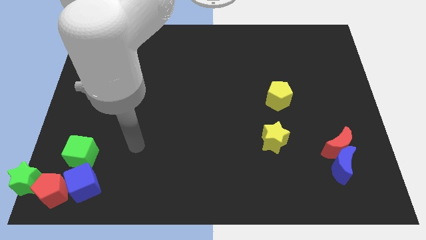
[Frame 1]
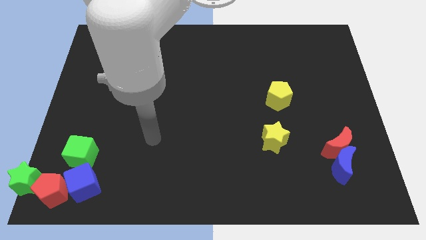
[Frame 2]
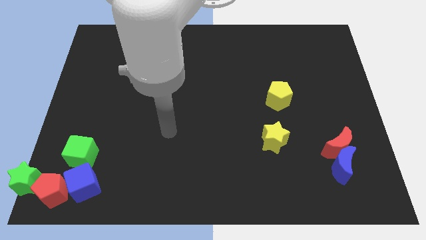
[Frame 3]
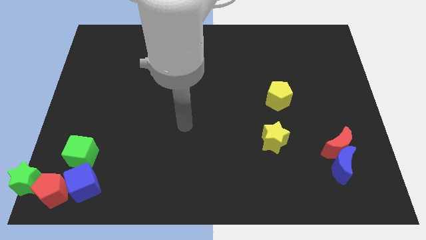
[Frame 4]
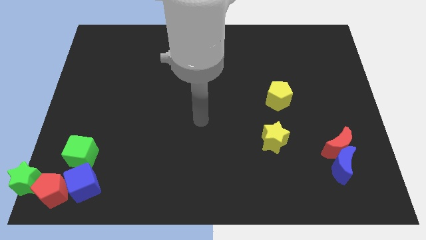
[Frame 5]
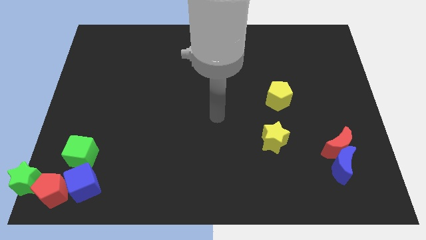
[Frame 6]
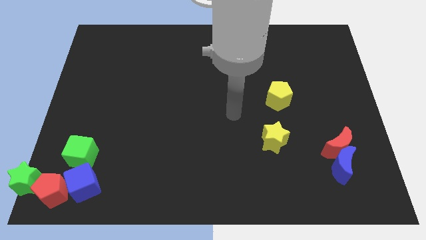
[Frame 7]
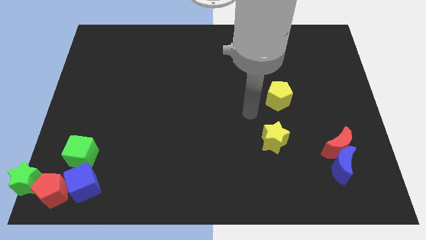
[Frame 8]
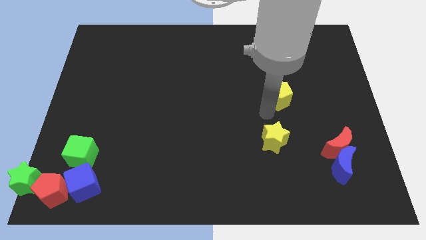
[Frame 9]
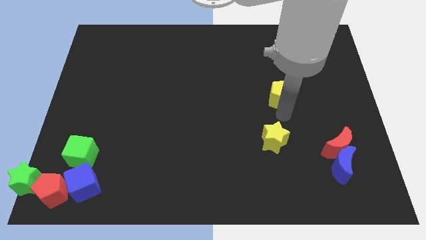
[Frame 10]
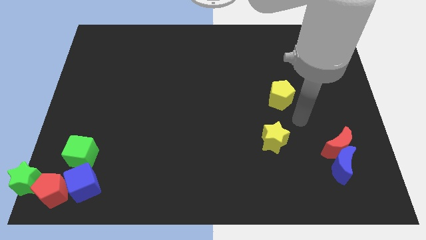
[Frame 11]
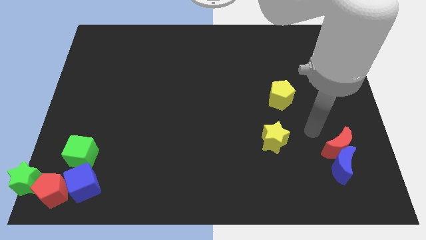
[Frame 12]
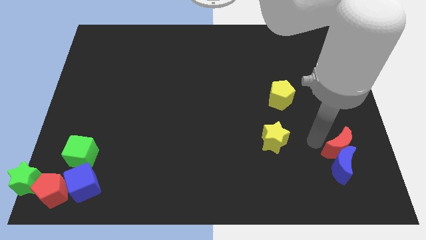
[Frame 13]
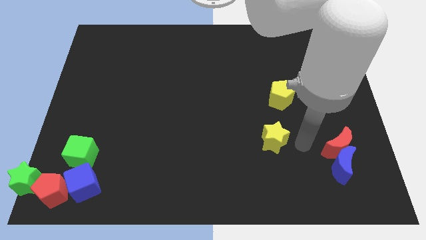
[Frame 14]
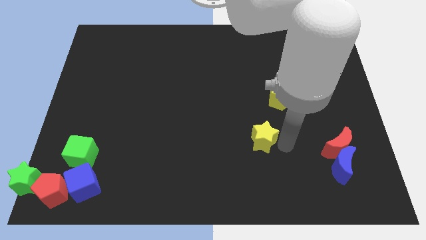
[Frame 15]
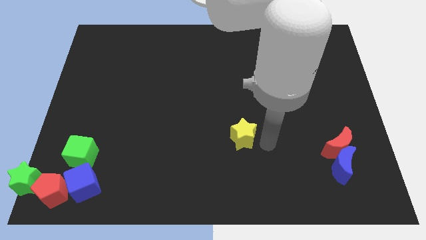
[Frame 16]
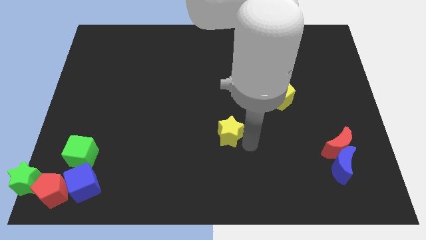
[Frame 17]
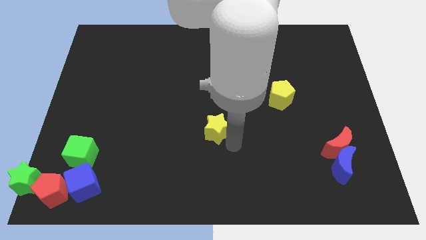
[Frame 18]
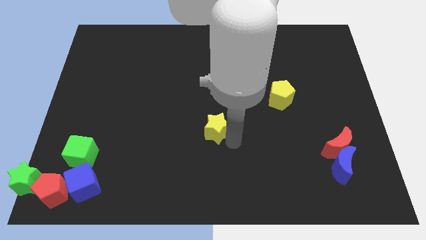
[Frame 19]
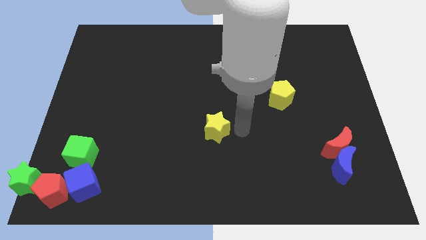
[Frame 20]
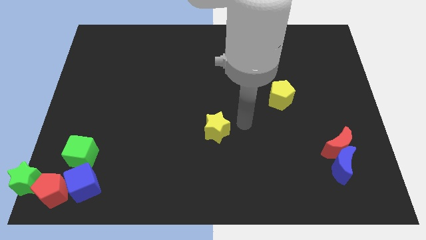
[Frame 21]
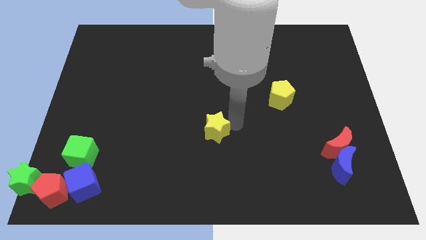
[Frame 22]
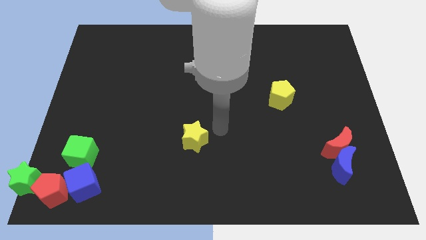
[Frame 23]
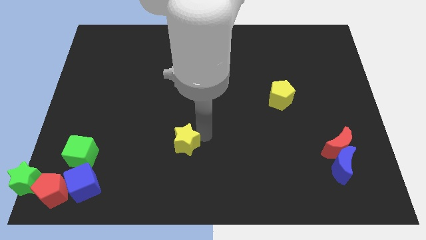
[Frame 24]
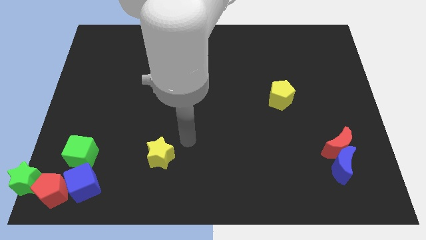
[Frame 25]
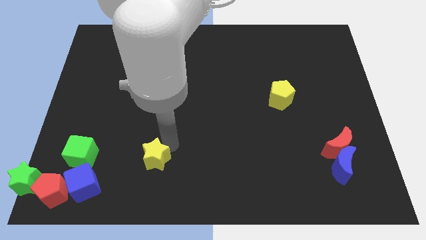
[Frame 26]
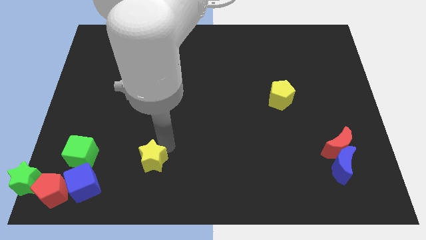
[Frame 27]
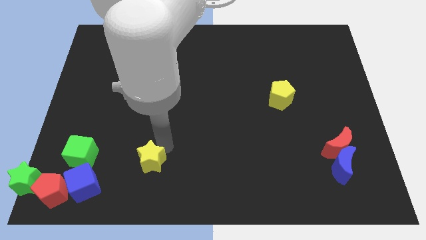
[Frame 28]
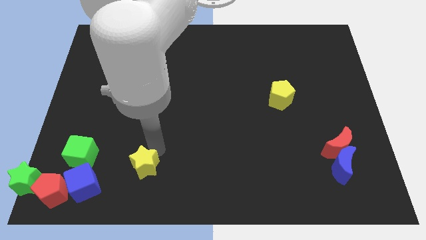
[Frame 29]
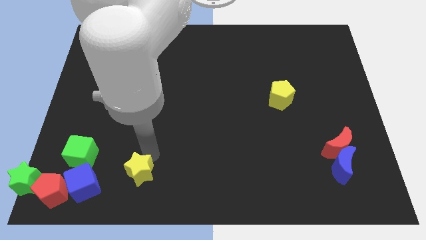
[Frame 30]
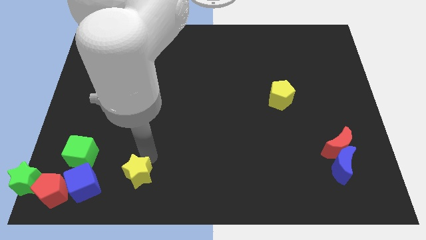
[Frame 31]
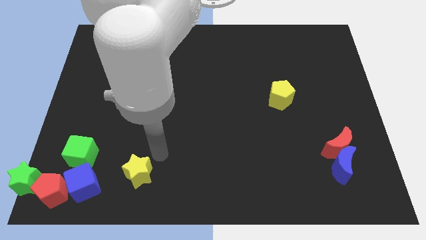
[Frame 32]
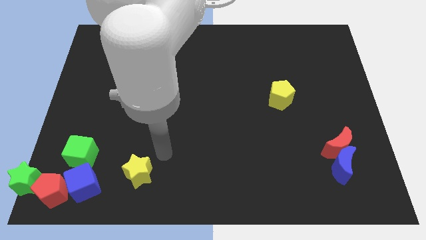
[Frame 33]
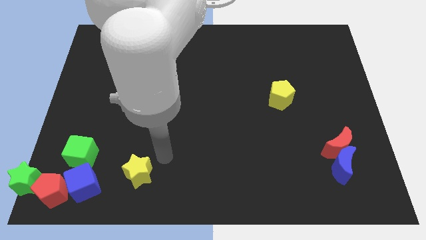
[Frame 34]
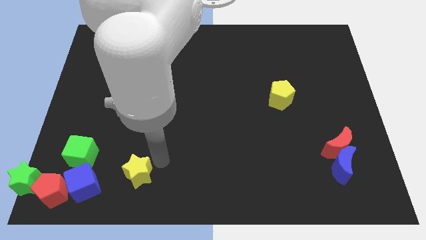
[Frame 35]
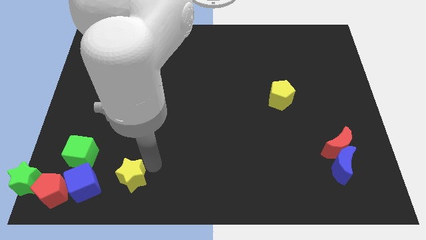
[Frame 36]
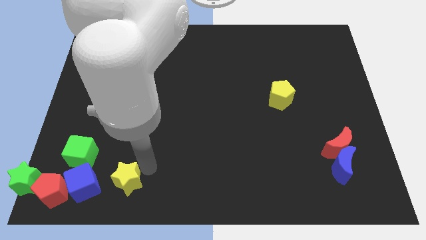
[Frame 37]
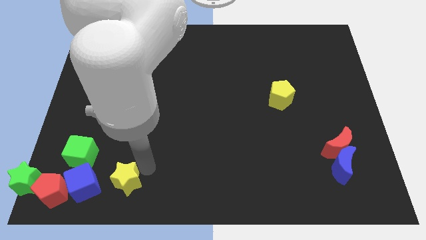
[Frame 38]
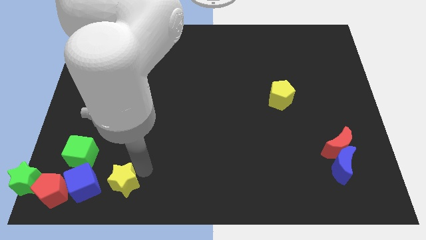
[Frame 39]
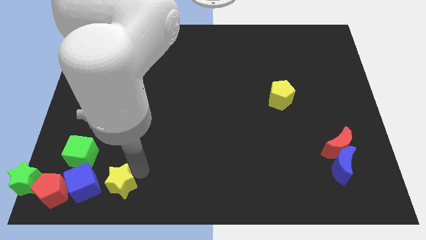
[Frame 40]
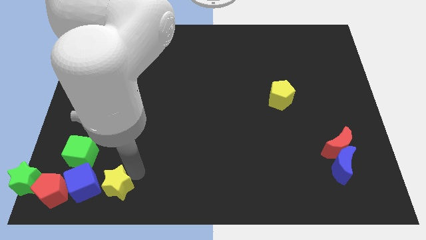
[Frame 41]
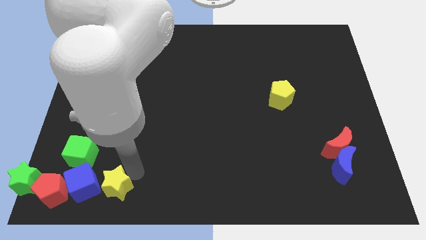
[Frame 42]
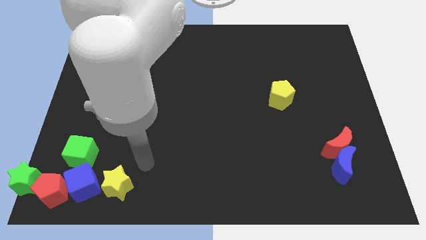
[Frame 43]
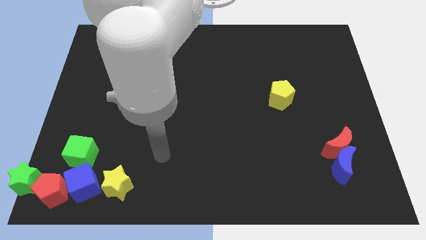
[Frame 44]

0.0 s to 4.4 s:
put the yellow star close to the group of blocks

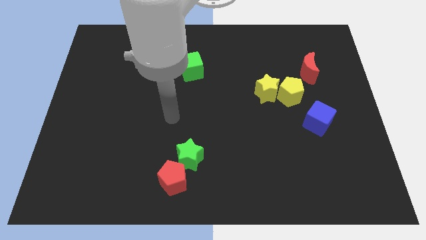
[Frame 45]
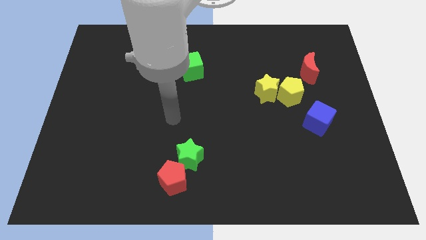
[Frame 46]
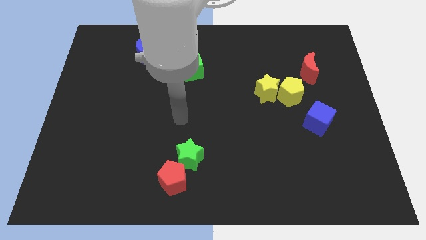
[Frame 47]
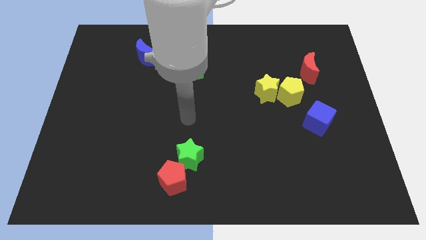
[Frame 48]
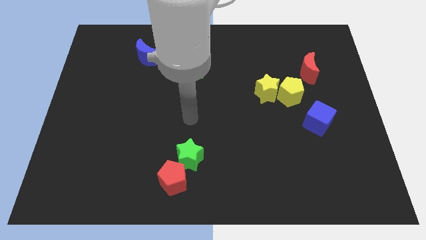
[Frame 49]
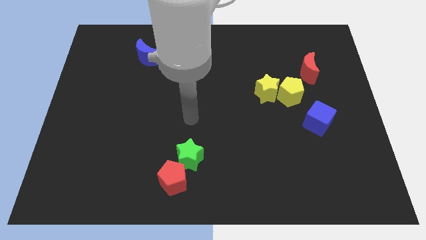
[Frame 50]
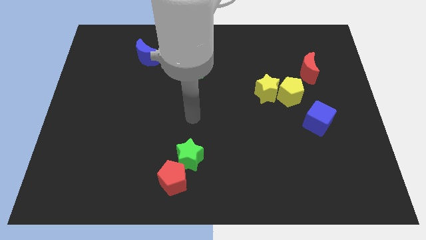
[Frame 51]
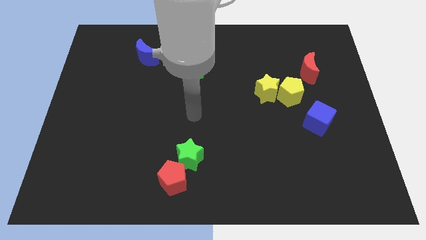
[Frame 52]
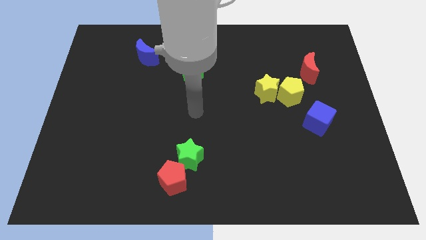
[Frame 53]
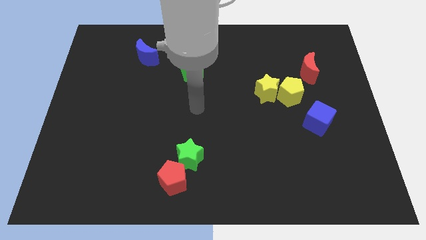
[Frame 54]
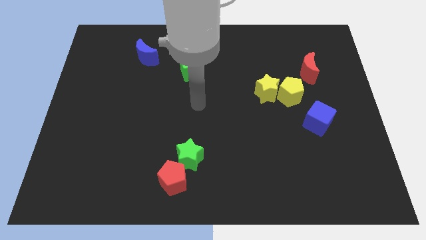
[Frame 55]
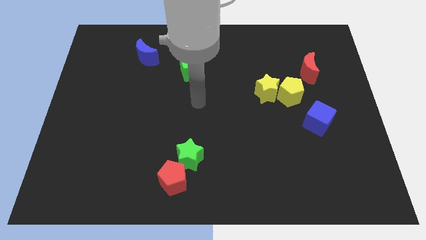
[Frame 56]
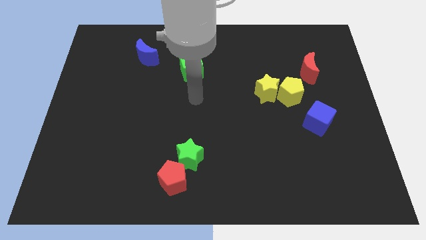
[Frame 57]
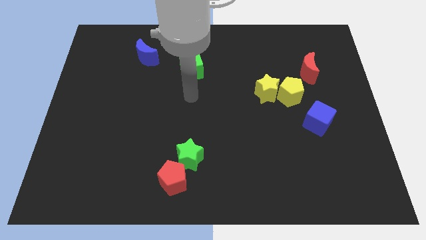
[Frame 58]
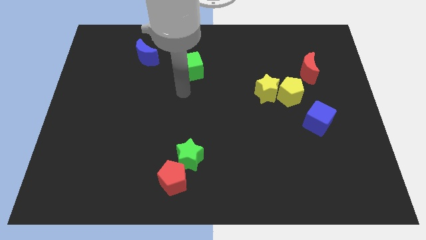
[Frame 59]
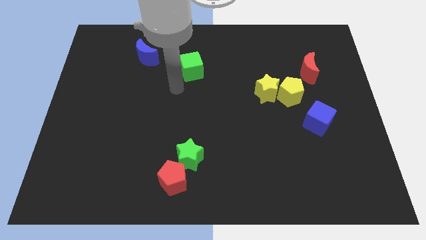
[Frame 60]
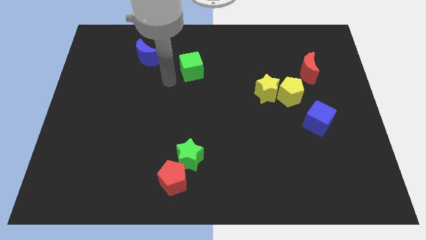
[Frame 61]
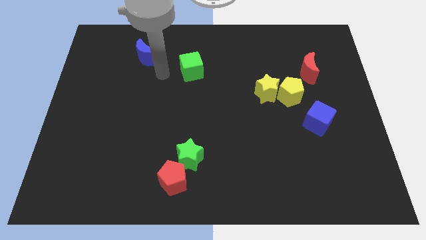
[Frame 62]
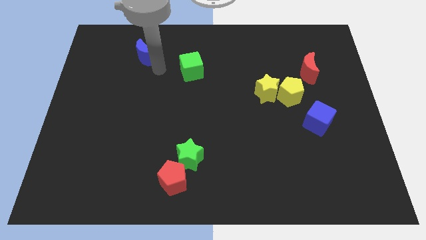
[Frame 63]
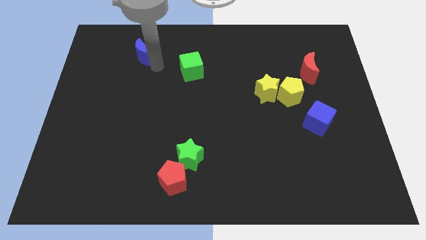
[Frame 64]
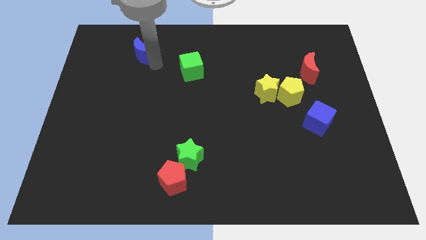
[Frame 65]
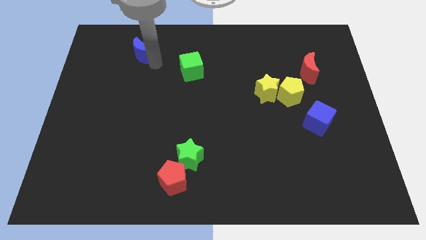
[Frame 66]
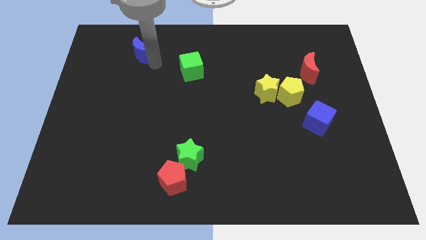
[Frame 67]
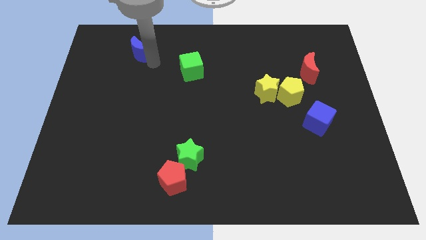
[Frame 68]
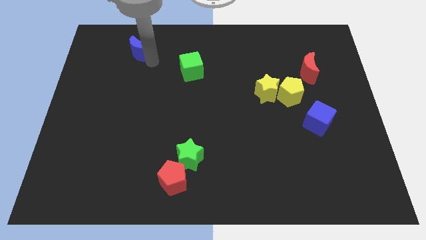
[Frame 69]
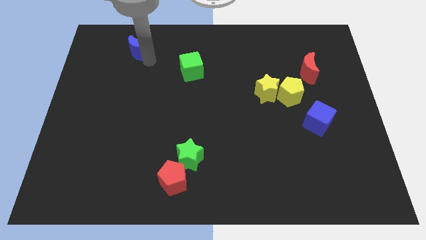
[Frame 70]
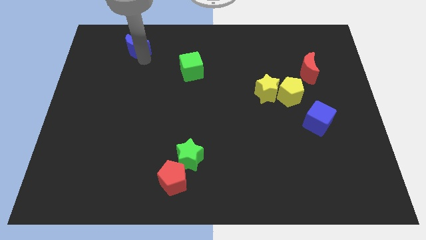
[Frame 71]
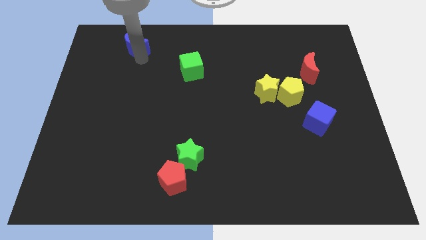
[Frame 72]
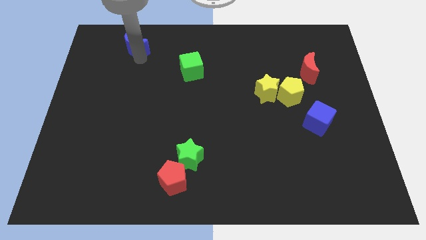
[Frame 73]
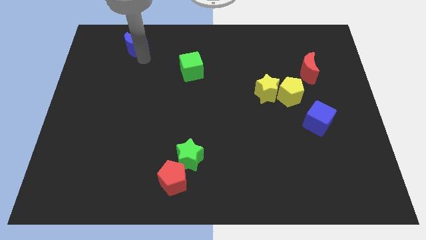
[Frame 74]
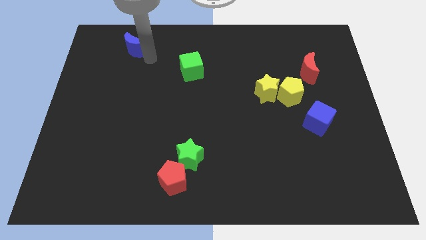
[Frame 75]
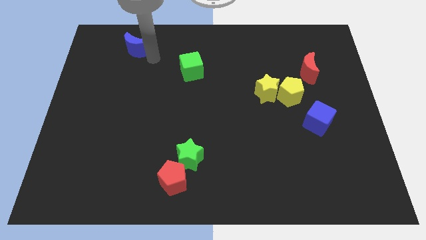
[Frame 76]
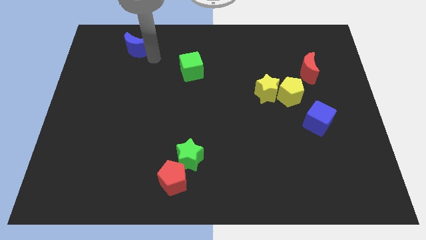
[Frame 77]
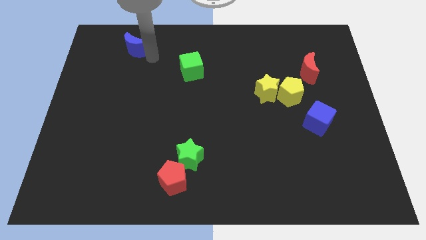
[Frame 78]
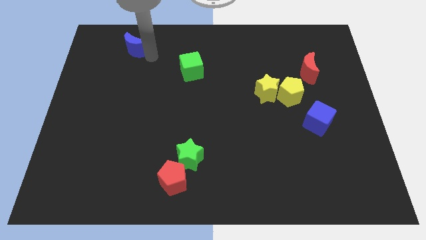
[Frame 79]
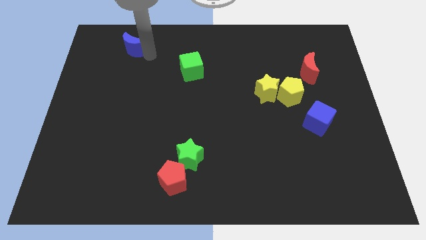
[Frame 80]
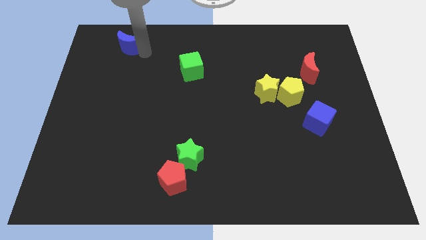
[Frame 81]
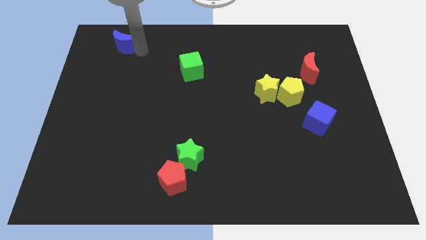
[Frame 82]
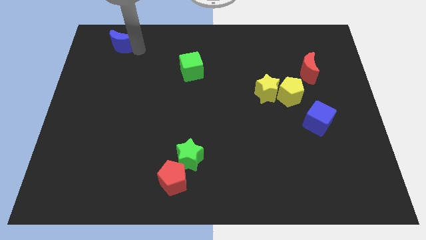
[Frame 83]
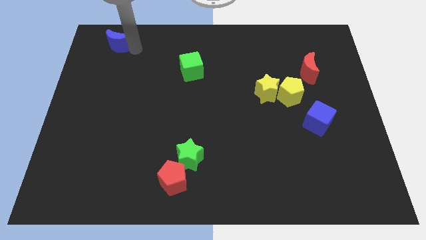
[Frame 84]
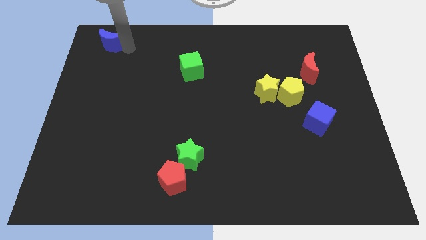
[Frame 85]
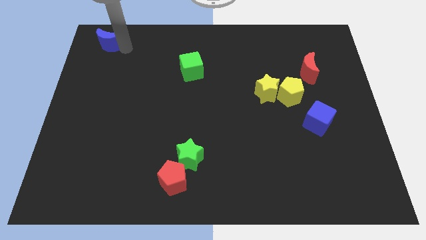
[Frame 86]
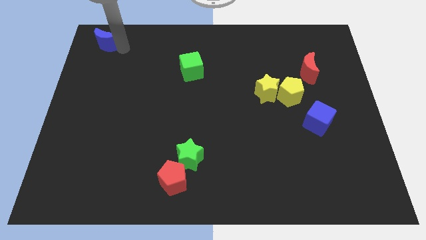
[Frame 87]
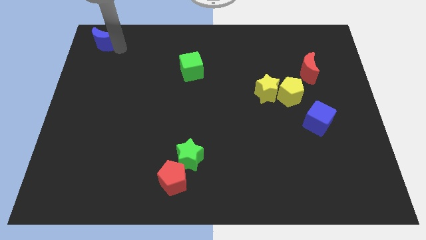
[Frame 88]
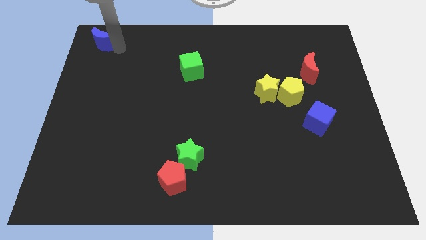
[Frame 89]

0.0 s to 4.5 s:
place blue moon to the top left corner of the board

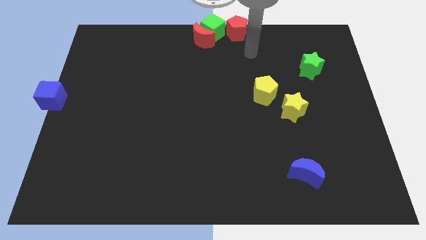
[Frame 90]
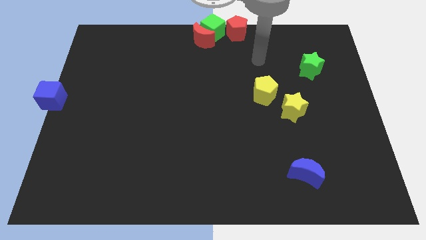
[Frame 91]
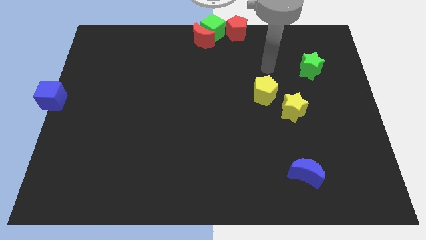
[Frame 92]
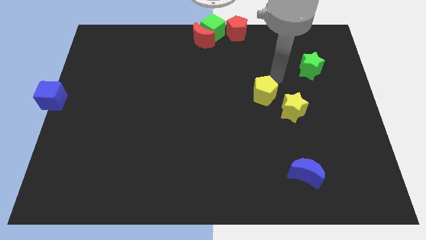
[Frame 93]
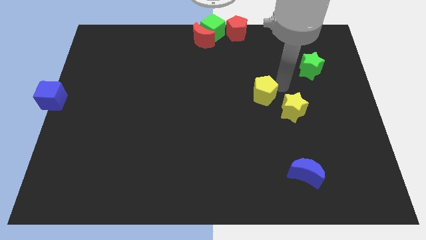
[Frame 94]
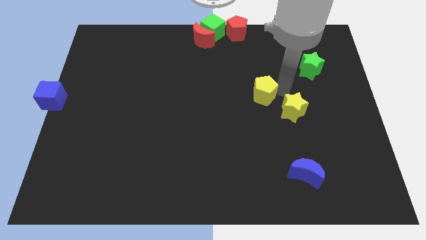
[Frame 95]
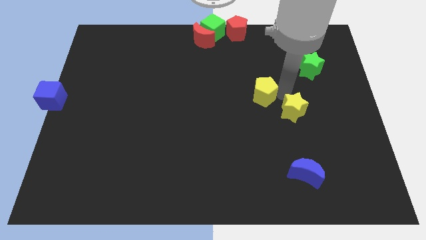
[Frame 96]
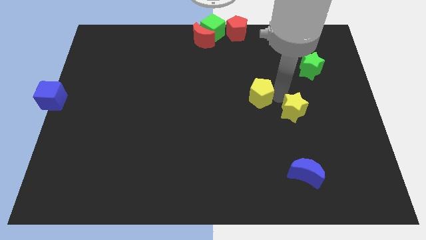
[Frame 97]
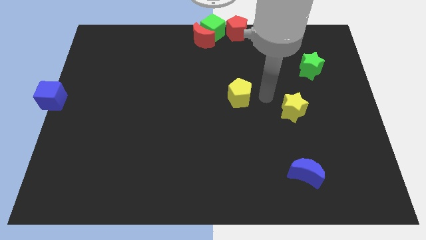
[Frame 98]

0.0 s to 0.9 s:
slightly move the yellow pentagon
